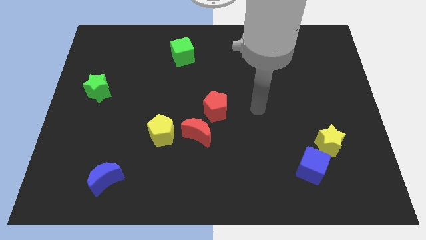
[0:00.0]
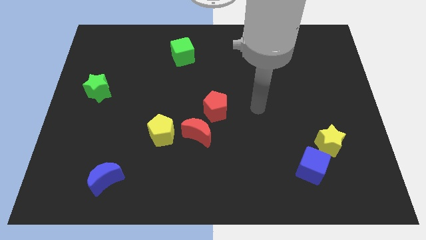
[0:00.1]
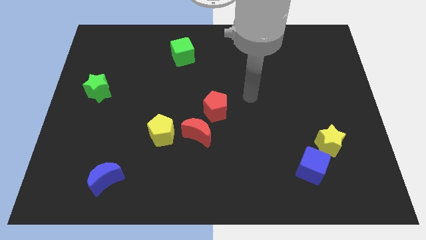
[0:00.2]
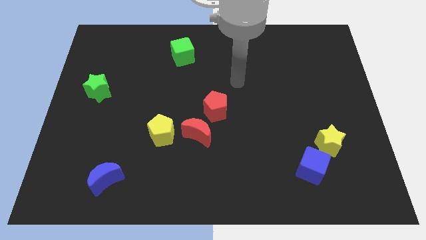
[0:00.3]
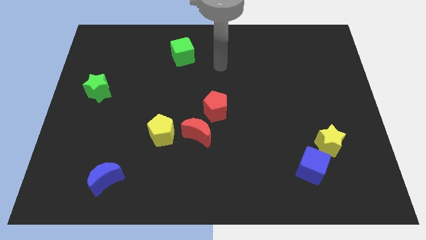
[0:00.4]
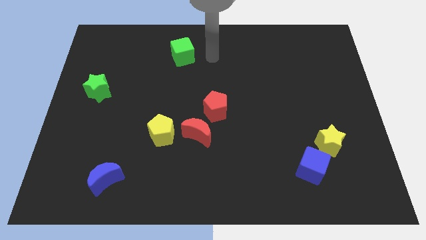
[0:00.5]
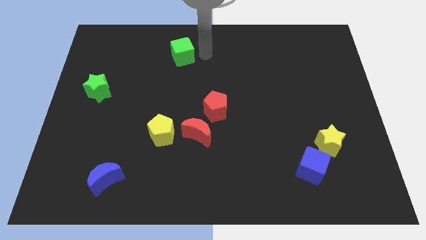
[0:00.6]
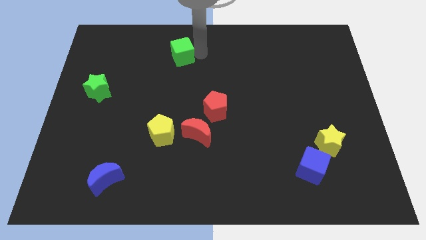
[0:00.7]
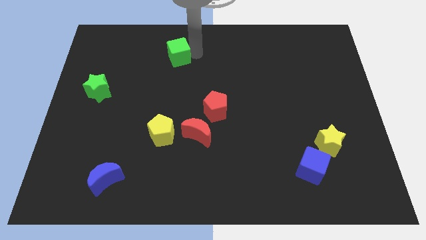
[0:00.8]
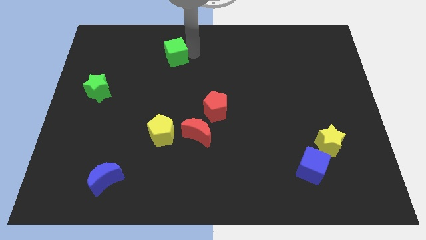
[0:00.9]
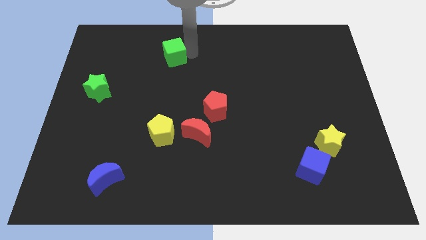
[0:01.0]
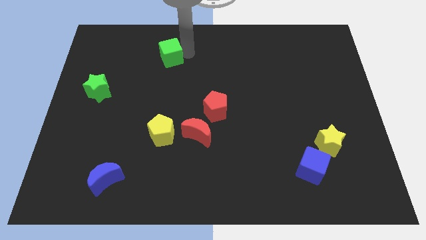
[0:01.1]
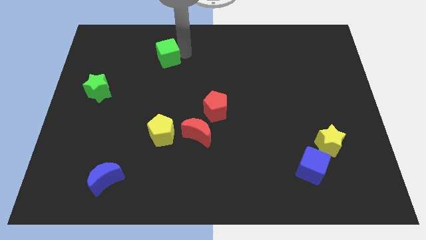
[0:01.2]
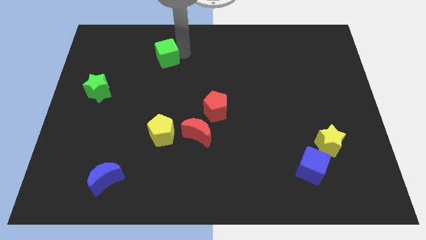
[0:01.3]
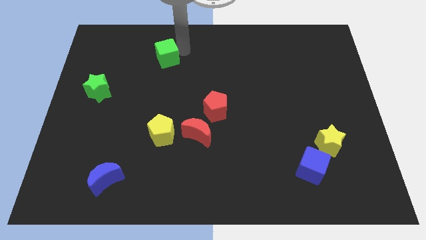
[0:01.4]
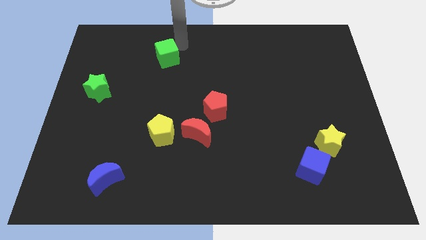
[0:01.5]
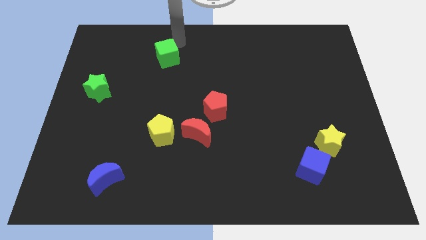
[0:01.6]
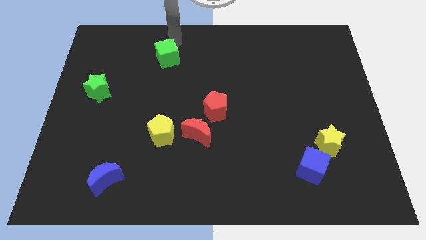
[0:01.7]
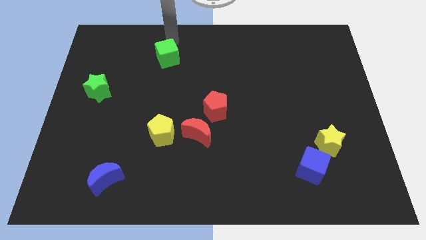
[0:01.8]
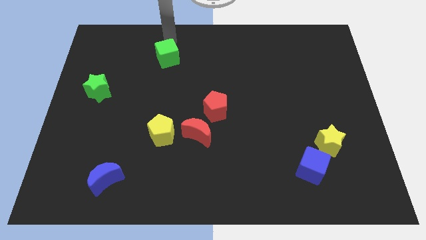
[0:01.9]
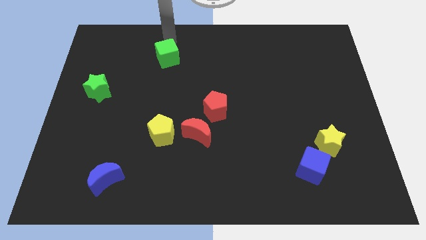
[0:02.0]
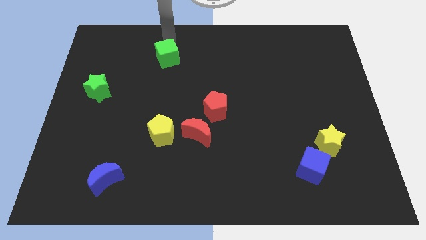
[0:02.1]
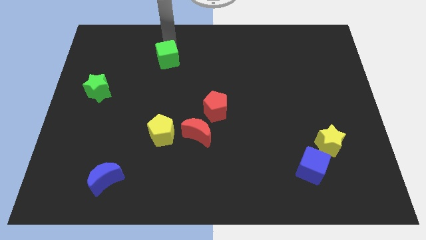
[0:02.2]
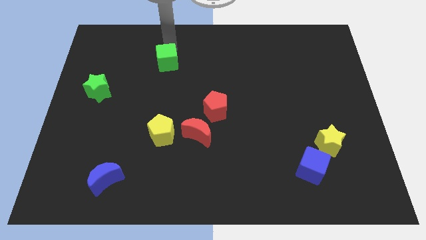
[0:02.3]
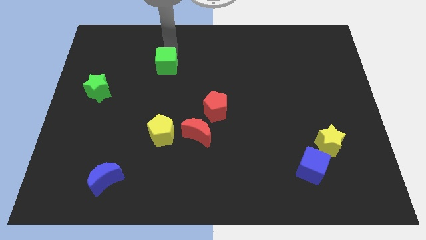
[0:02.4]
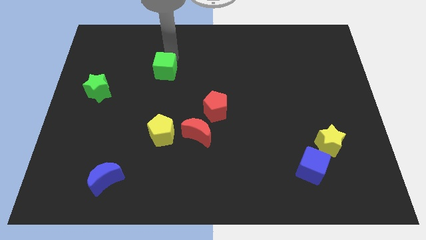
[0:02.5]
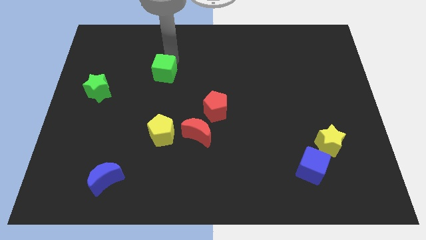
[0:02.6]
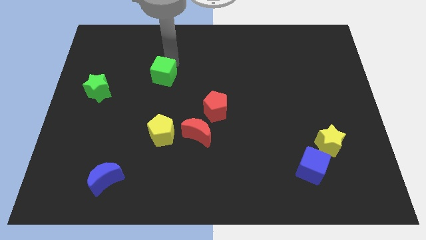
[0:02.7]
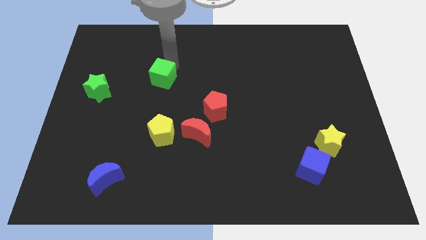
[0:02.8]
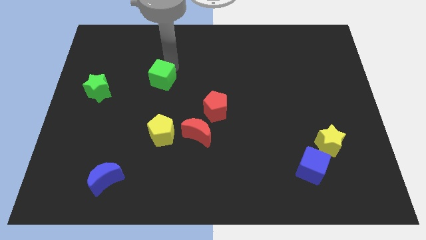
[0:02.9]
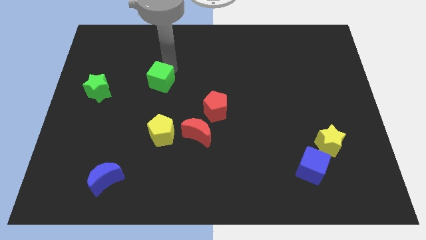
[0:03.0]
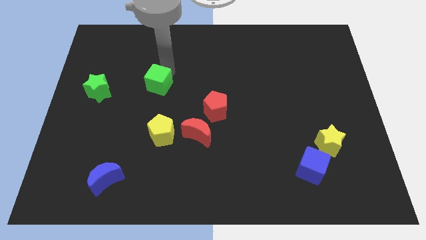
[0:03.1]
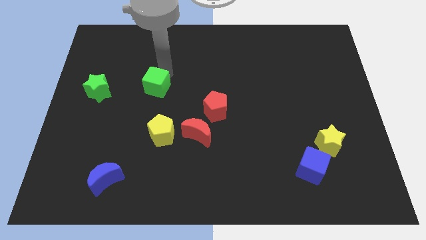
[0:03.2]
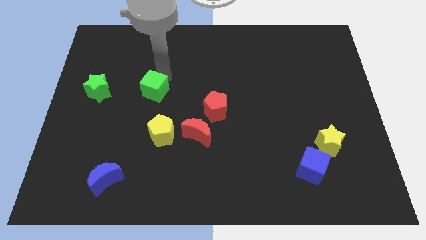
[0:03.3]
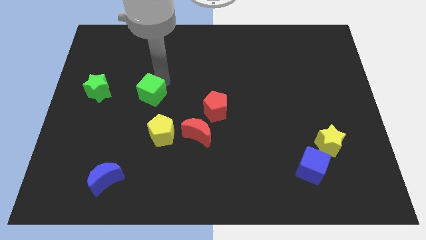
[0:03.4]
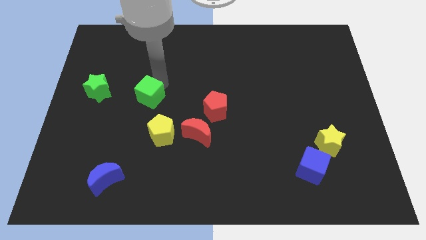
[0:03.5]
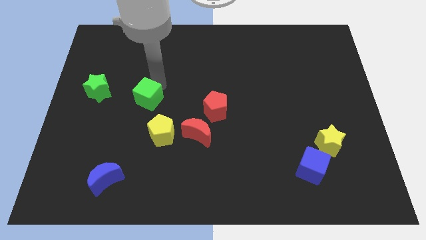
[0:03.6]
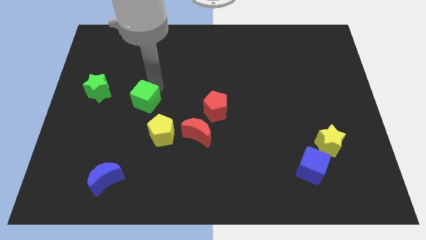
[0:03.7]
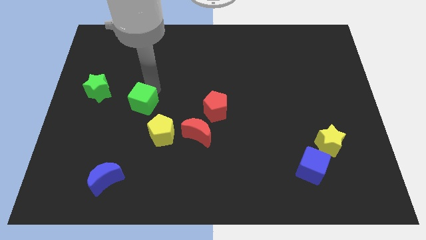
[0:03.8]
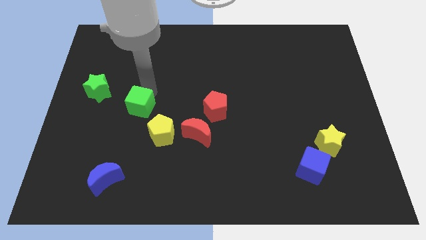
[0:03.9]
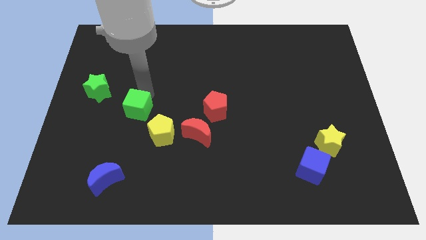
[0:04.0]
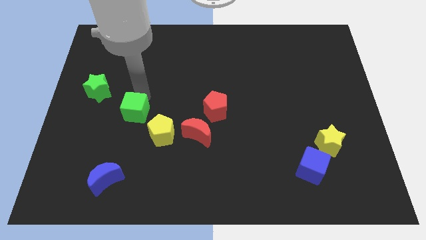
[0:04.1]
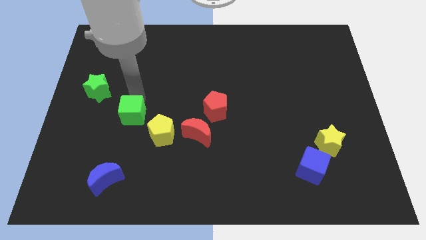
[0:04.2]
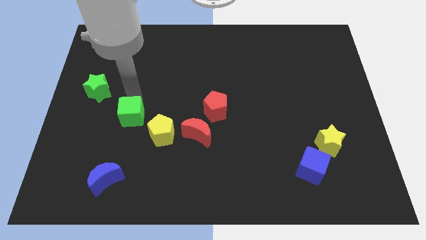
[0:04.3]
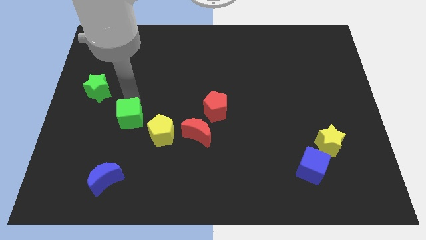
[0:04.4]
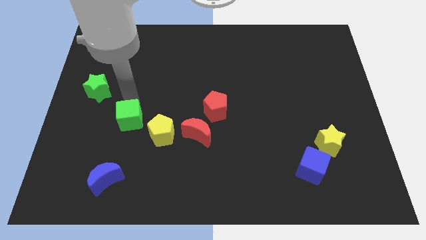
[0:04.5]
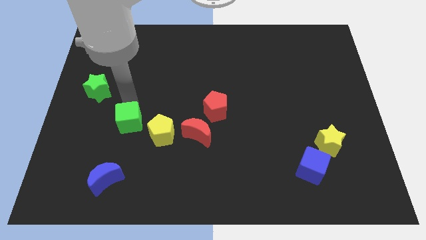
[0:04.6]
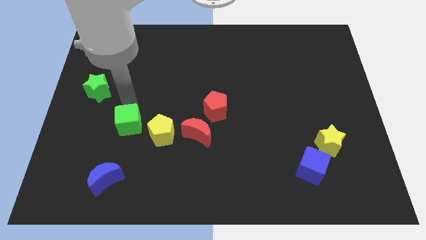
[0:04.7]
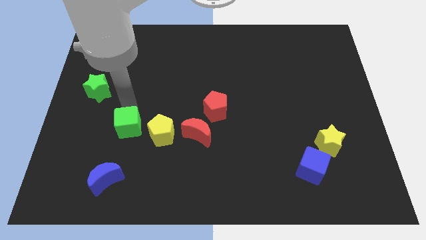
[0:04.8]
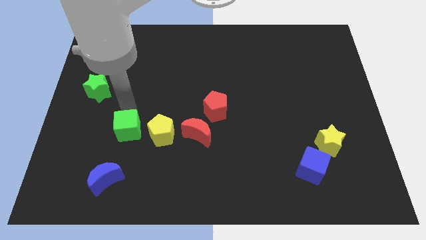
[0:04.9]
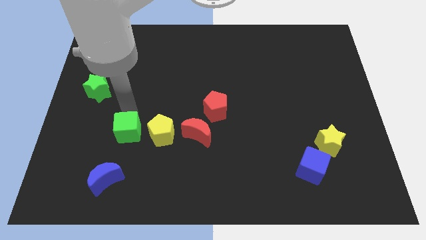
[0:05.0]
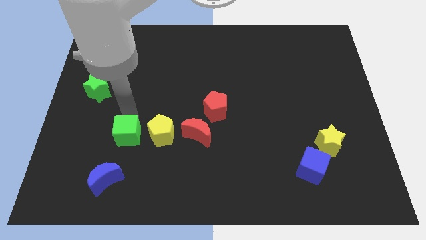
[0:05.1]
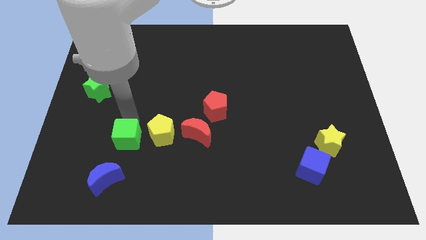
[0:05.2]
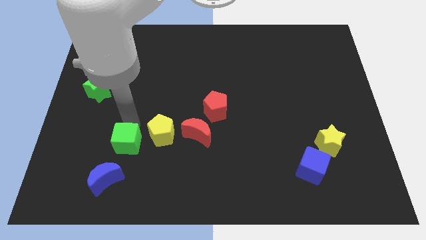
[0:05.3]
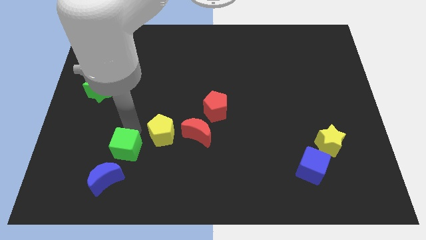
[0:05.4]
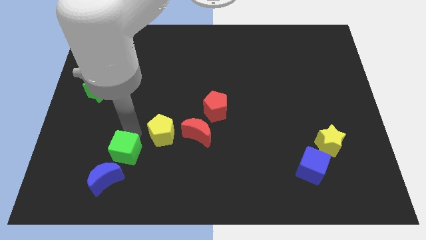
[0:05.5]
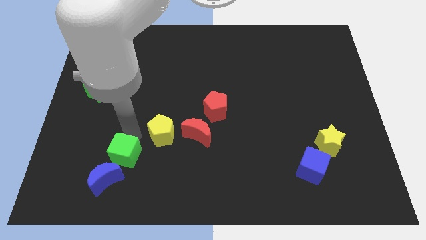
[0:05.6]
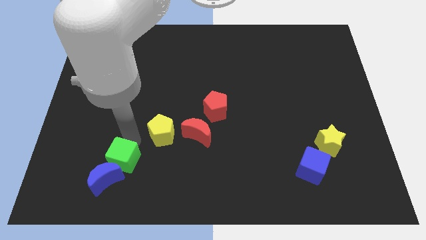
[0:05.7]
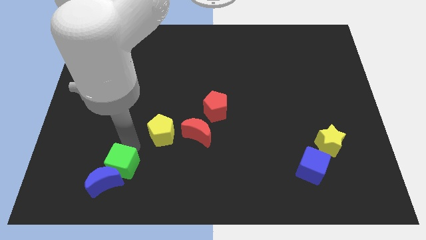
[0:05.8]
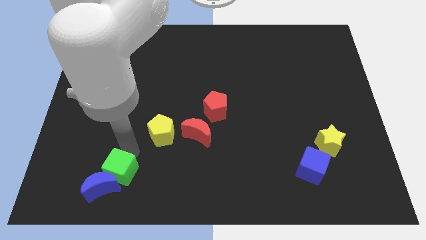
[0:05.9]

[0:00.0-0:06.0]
move the green cube next to the blue moon

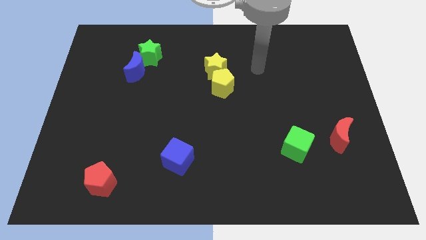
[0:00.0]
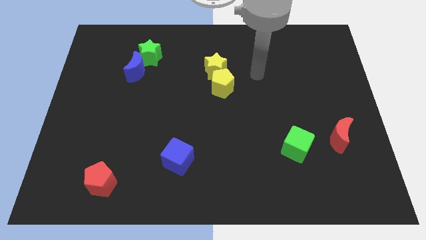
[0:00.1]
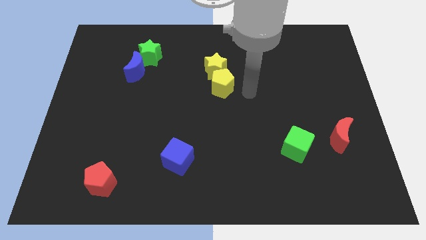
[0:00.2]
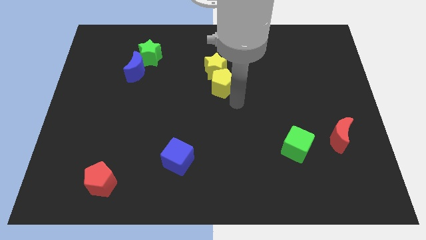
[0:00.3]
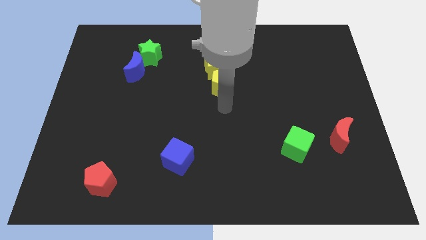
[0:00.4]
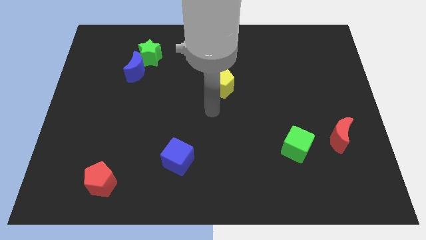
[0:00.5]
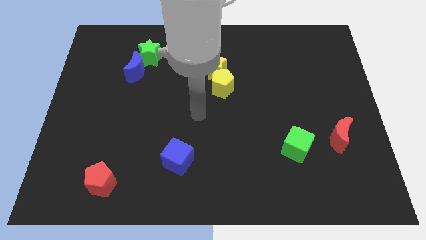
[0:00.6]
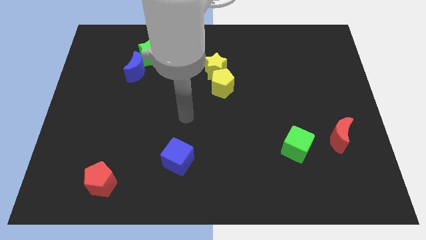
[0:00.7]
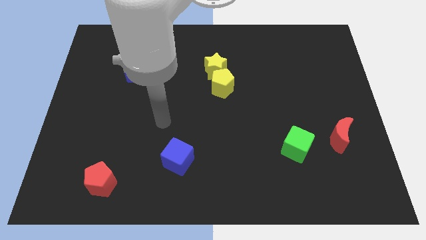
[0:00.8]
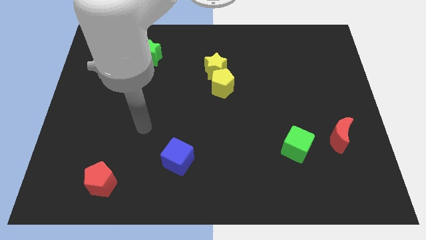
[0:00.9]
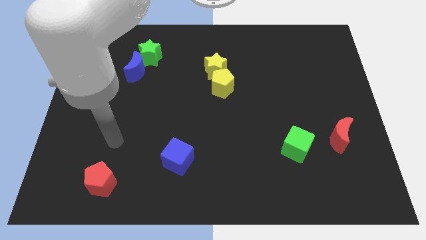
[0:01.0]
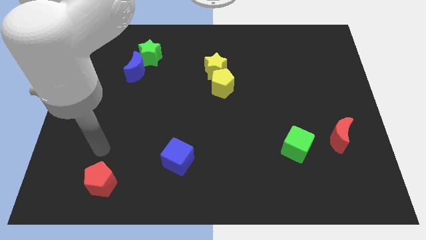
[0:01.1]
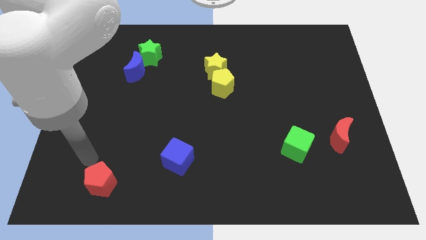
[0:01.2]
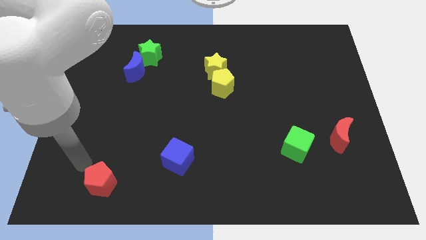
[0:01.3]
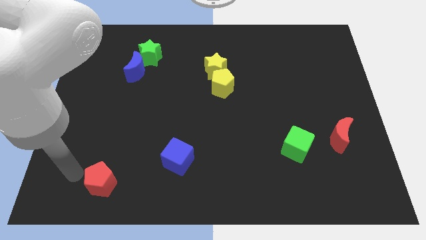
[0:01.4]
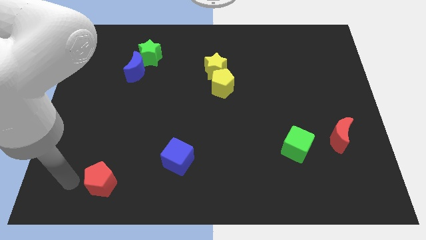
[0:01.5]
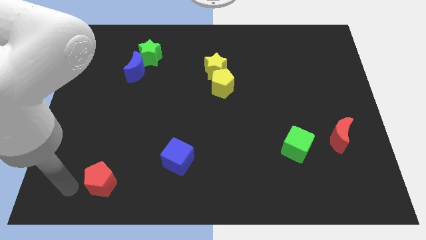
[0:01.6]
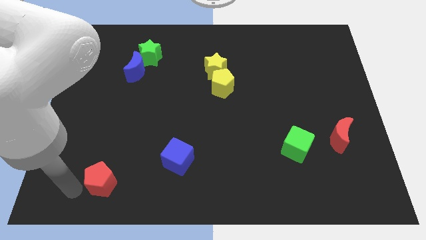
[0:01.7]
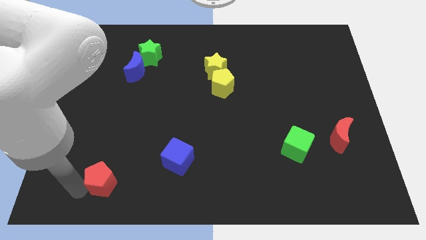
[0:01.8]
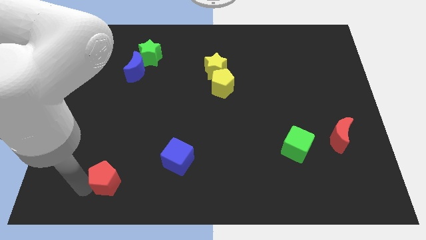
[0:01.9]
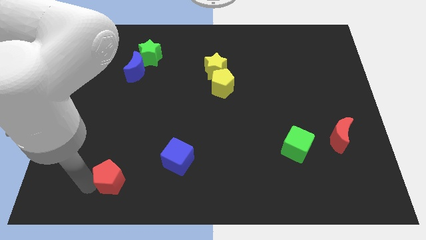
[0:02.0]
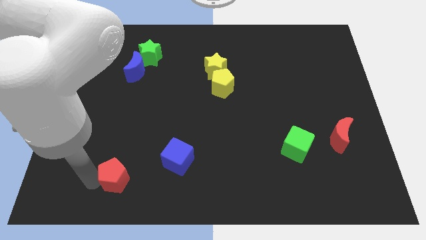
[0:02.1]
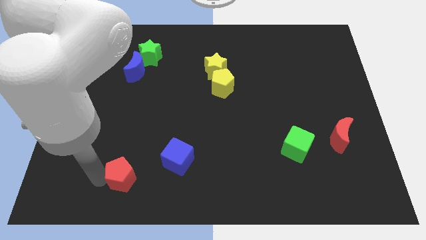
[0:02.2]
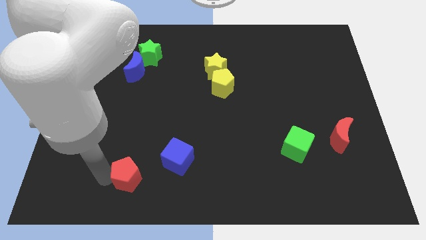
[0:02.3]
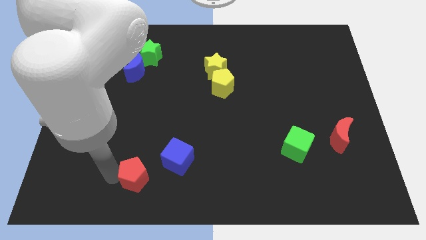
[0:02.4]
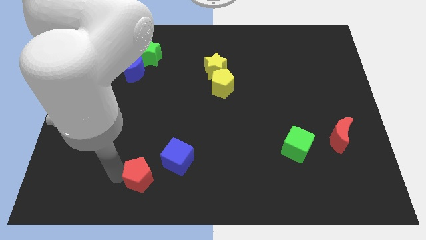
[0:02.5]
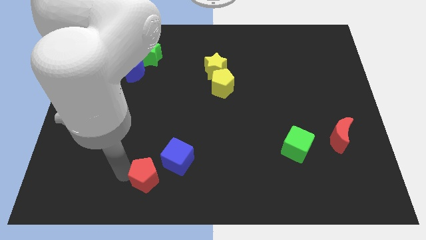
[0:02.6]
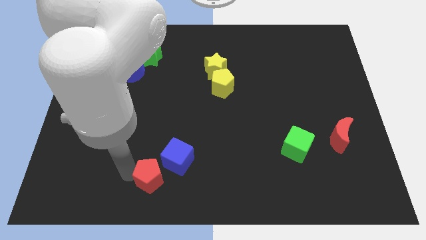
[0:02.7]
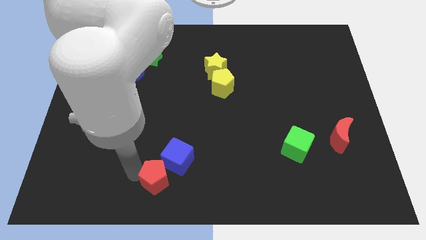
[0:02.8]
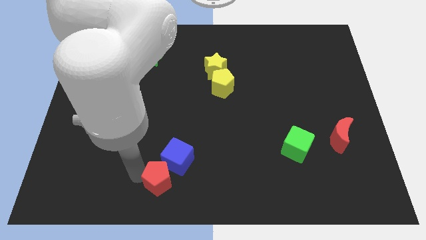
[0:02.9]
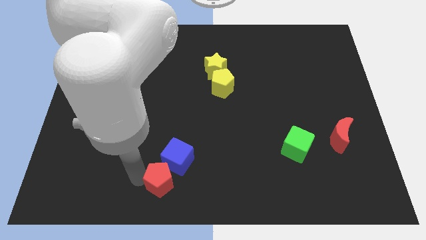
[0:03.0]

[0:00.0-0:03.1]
slide the red pentagon next to the blue cube
